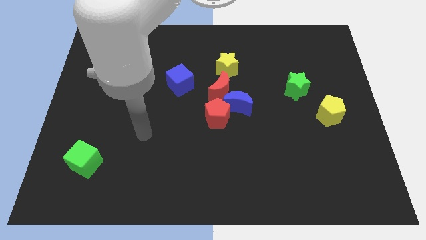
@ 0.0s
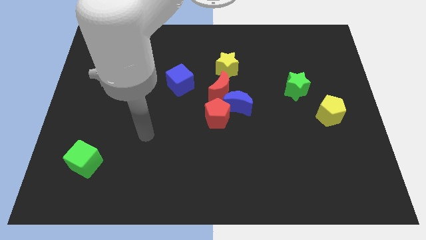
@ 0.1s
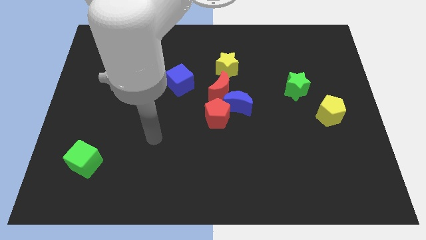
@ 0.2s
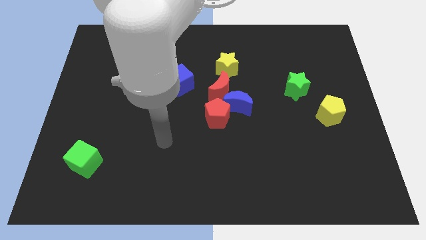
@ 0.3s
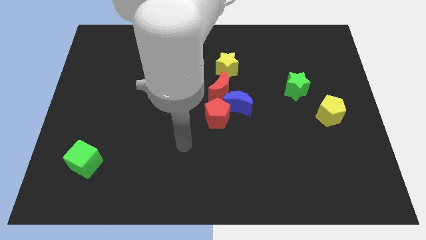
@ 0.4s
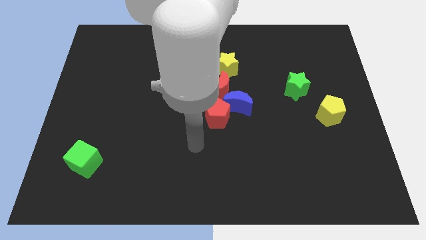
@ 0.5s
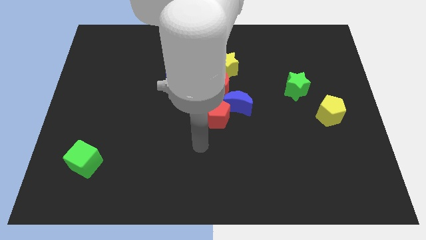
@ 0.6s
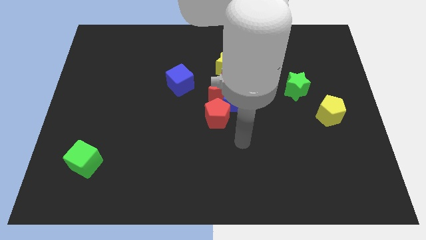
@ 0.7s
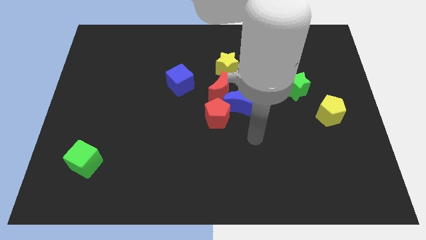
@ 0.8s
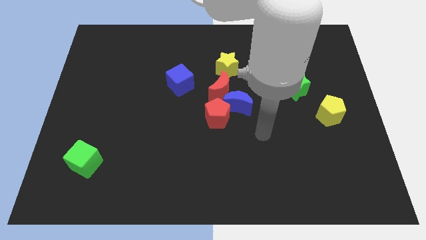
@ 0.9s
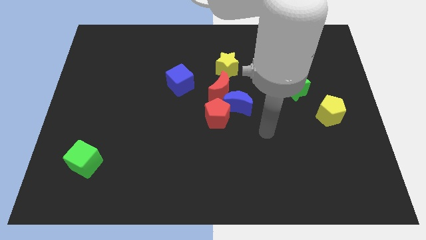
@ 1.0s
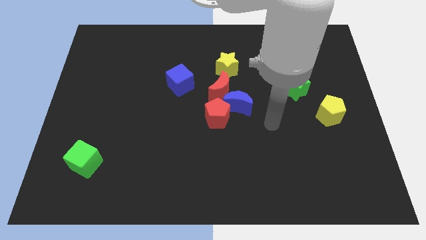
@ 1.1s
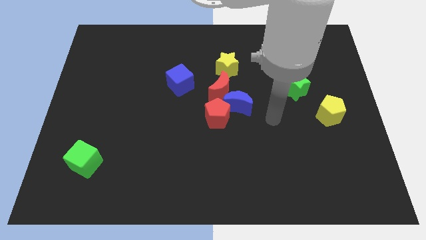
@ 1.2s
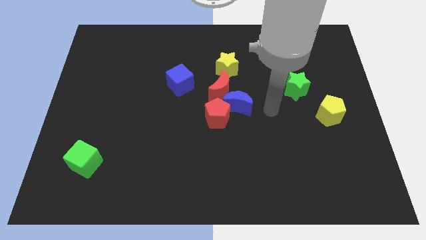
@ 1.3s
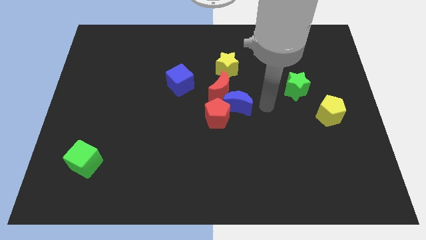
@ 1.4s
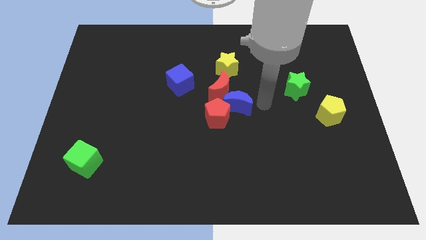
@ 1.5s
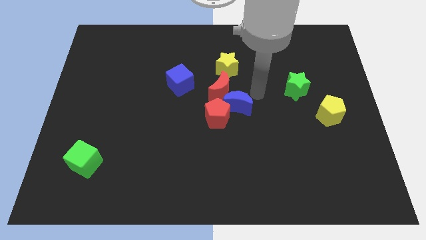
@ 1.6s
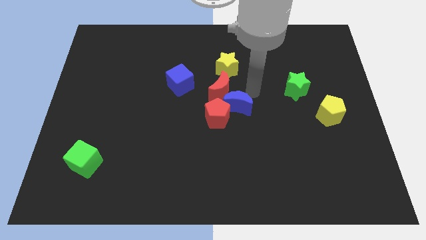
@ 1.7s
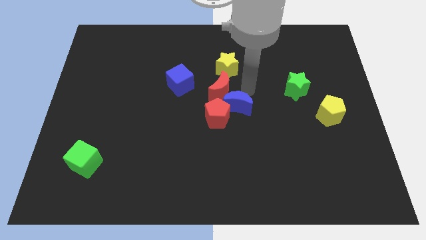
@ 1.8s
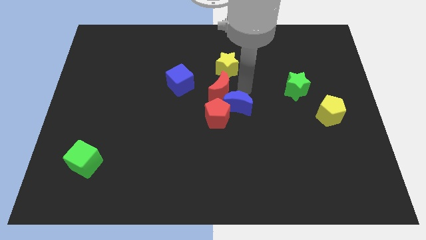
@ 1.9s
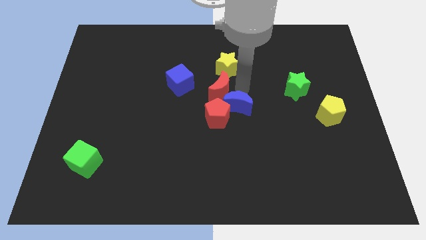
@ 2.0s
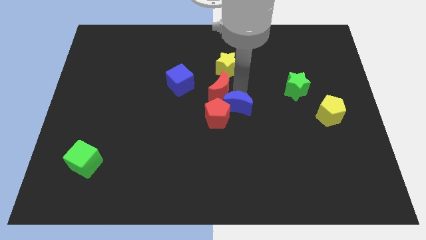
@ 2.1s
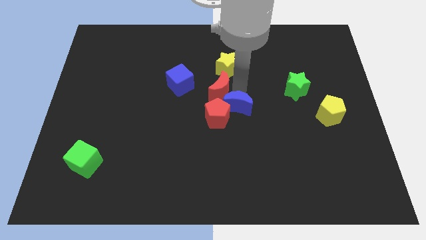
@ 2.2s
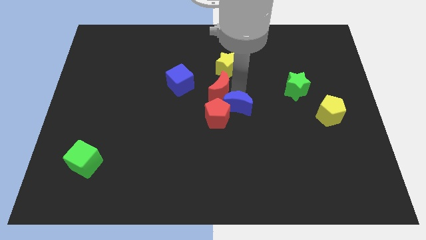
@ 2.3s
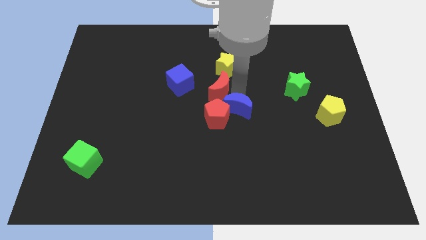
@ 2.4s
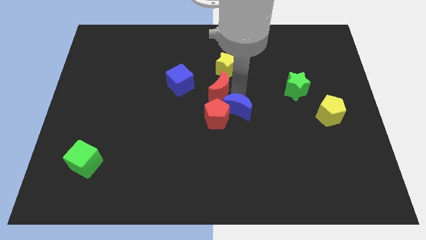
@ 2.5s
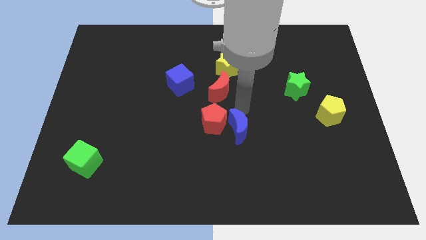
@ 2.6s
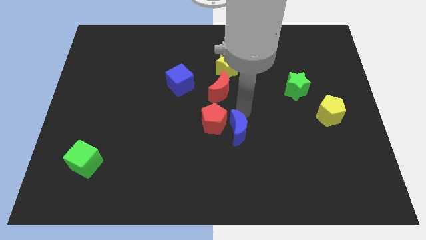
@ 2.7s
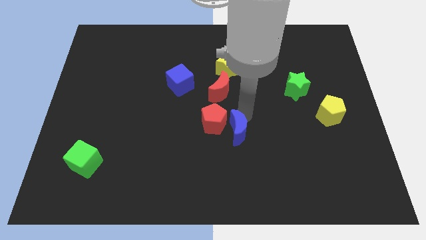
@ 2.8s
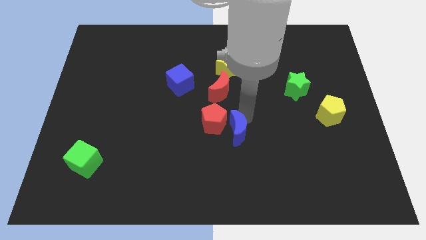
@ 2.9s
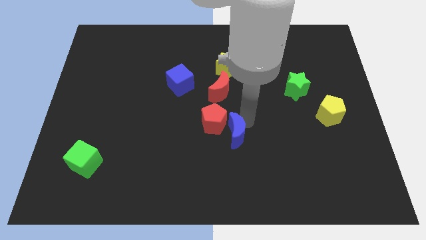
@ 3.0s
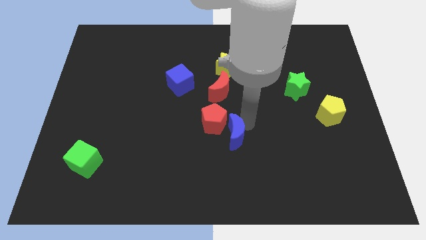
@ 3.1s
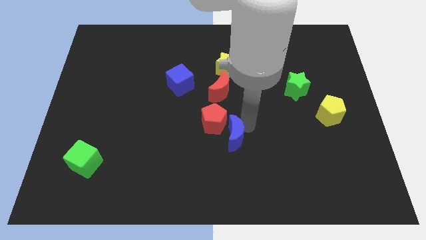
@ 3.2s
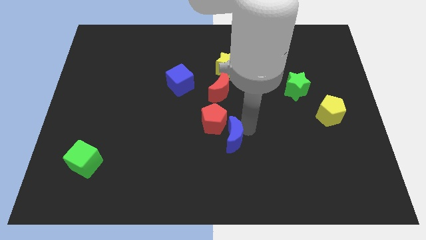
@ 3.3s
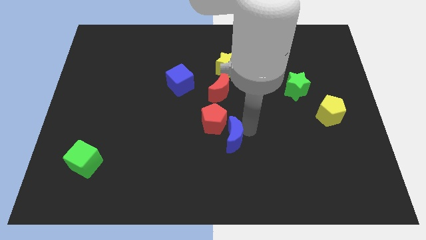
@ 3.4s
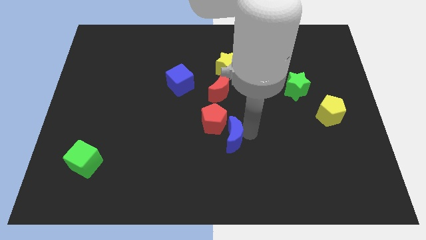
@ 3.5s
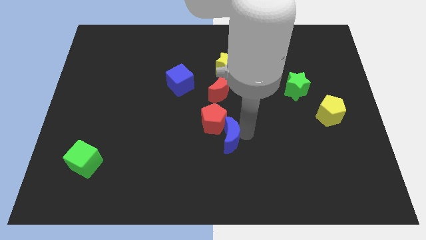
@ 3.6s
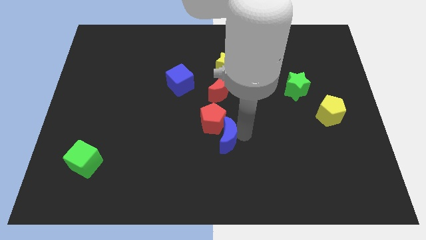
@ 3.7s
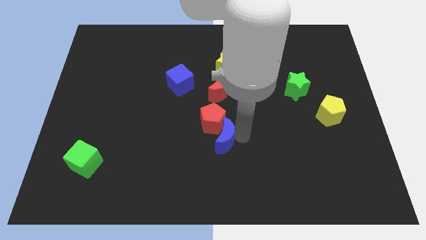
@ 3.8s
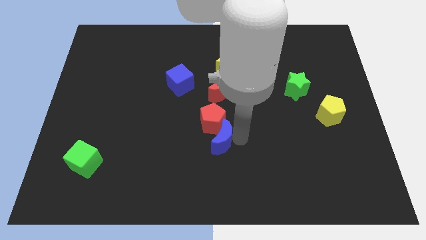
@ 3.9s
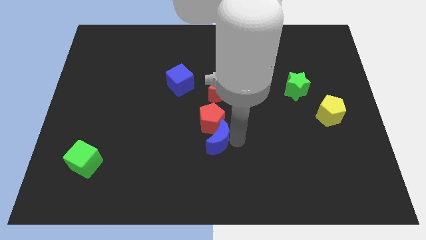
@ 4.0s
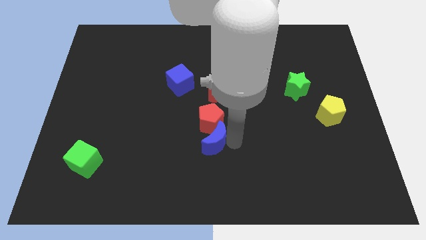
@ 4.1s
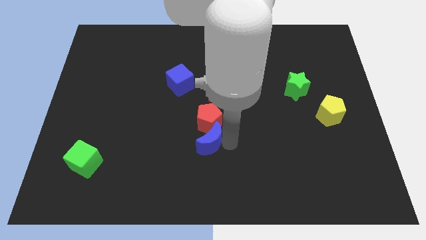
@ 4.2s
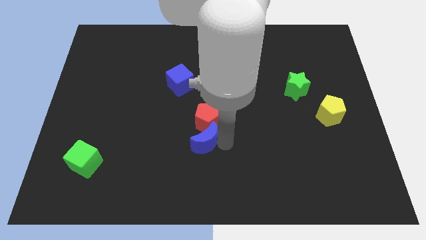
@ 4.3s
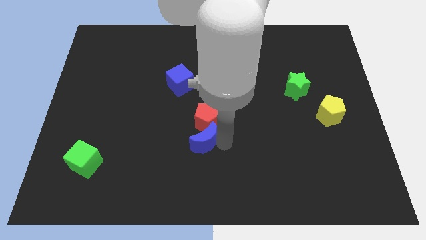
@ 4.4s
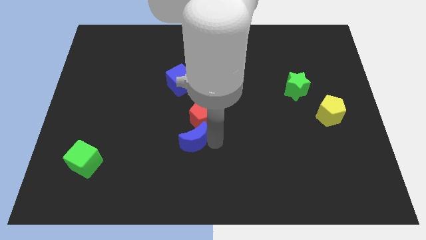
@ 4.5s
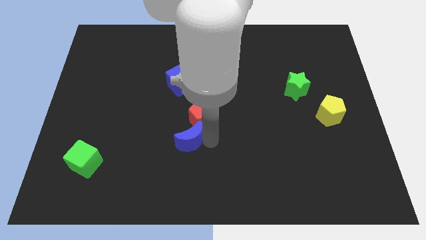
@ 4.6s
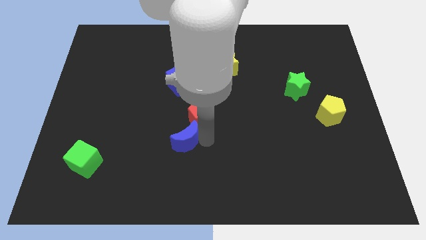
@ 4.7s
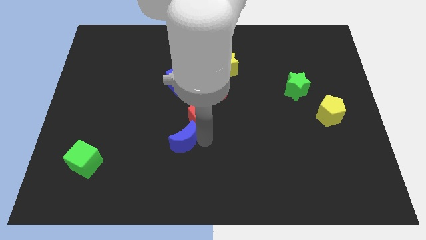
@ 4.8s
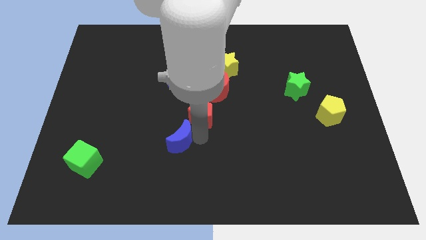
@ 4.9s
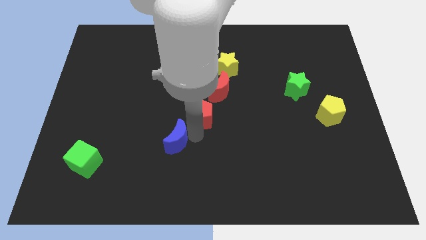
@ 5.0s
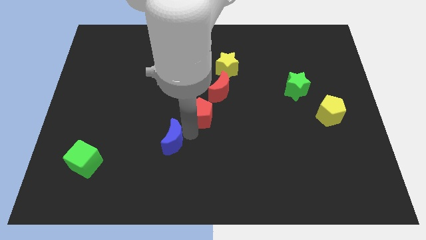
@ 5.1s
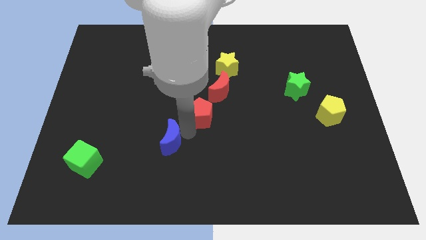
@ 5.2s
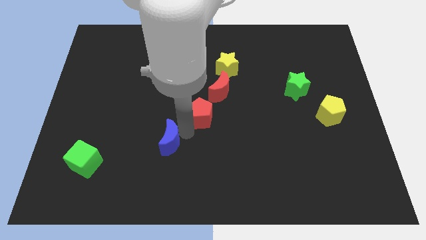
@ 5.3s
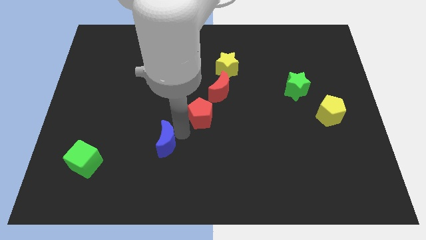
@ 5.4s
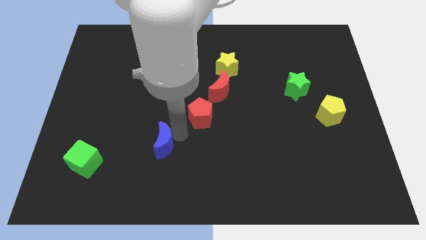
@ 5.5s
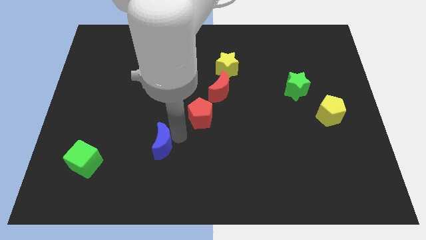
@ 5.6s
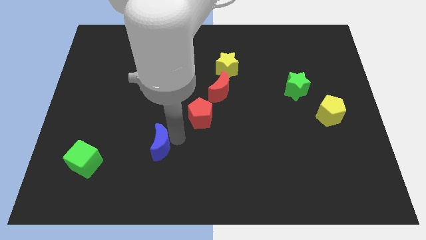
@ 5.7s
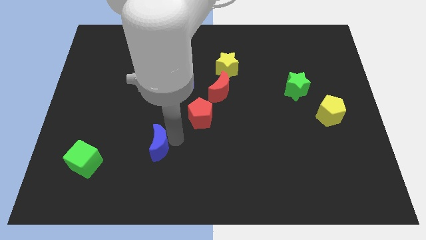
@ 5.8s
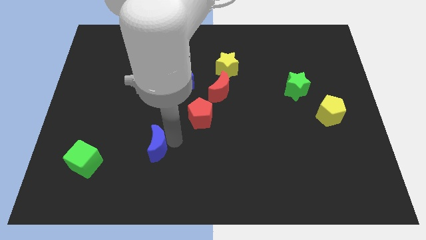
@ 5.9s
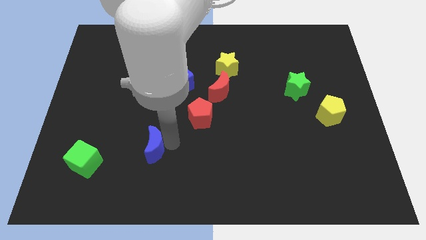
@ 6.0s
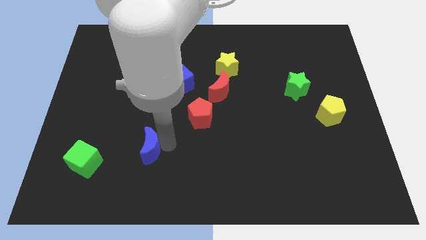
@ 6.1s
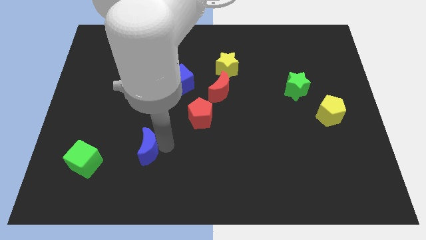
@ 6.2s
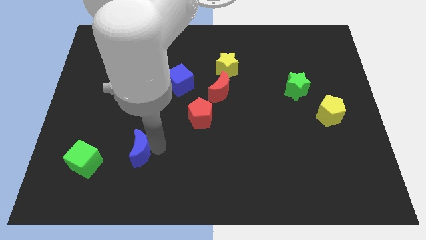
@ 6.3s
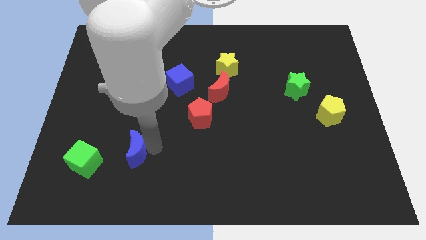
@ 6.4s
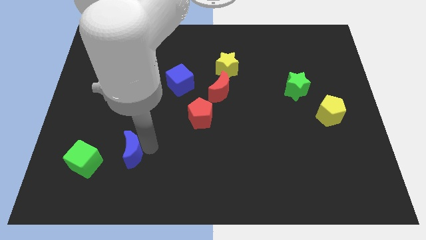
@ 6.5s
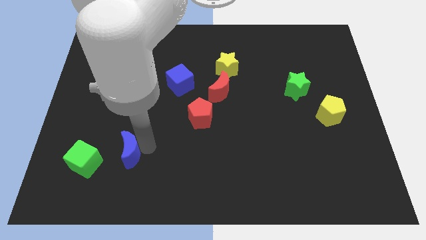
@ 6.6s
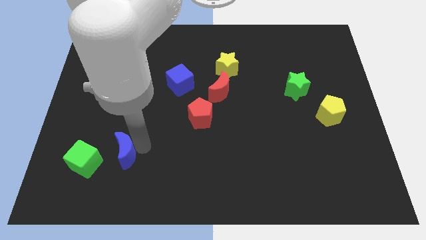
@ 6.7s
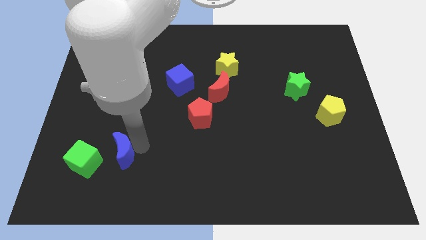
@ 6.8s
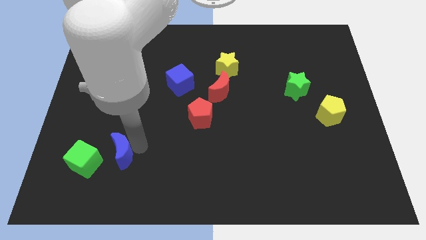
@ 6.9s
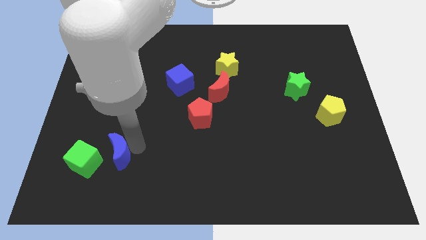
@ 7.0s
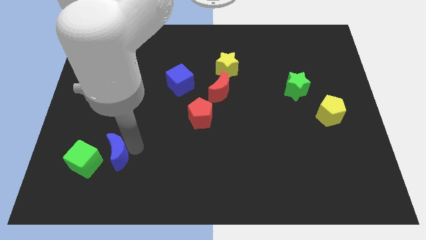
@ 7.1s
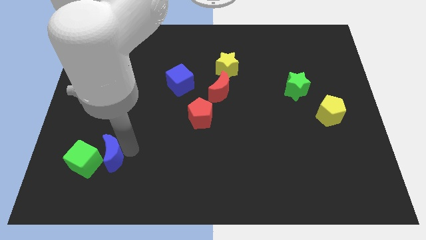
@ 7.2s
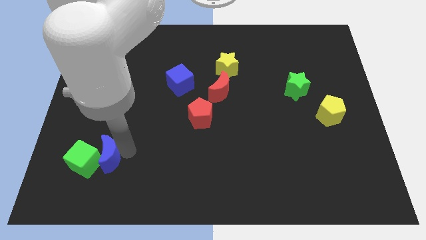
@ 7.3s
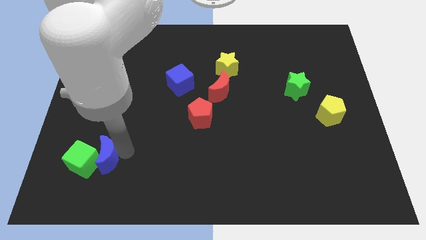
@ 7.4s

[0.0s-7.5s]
slide the blue moon to the green cube

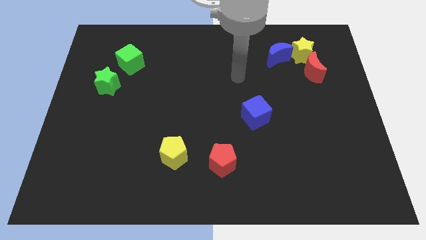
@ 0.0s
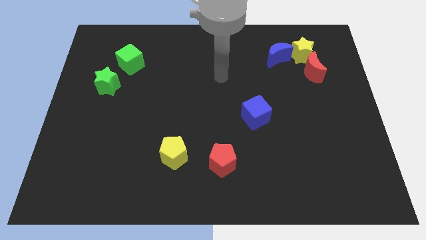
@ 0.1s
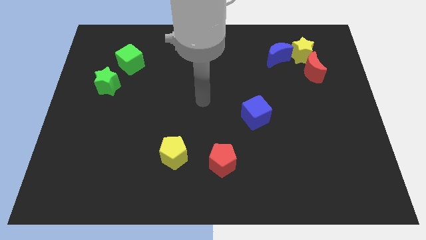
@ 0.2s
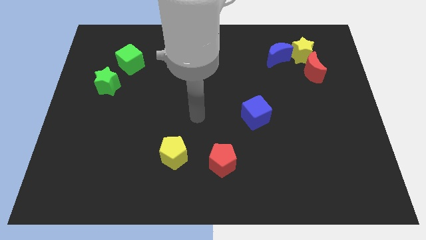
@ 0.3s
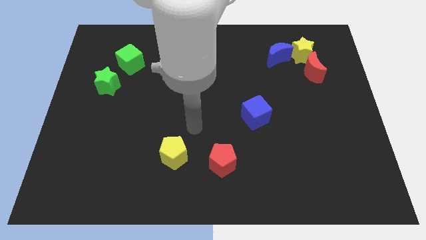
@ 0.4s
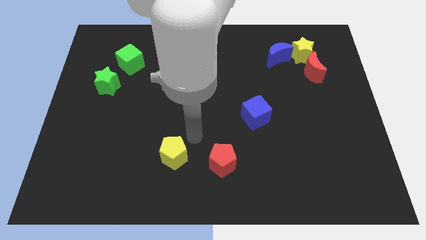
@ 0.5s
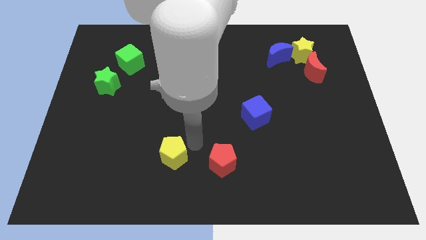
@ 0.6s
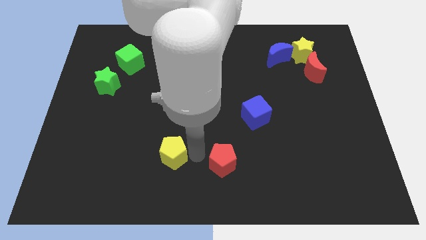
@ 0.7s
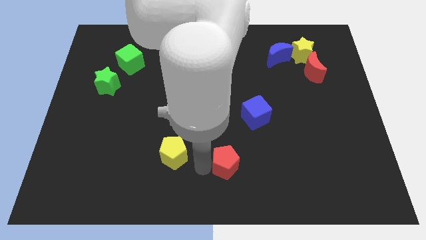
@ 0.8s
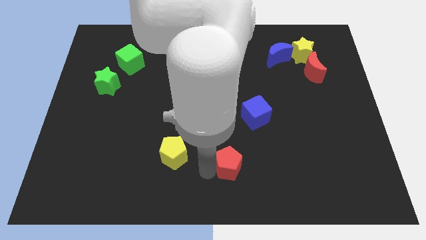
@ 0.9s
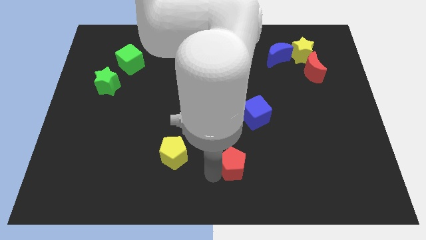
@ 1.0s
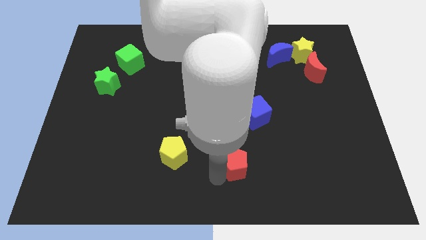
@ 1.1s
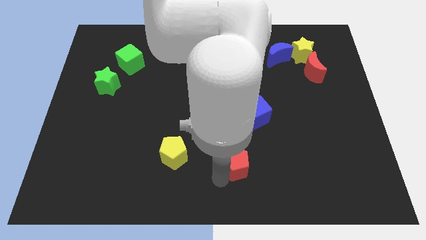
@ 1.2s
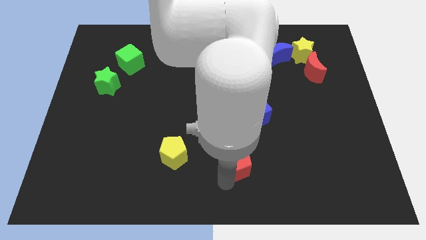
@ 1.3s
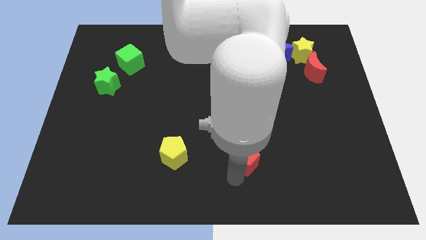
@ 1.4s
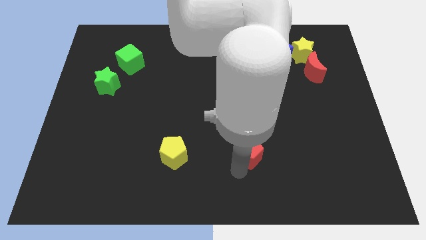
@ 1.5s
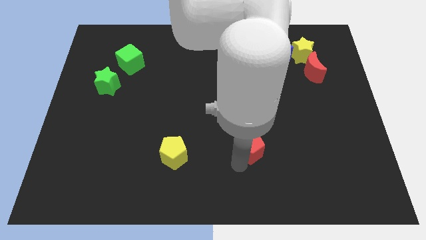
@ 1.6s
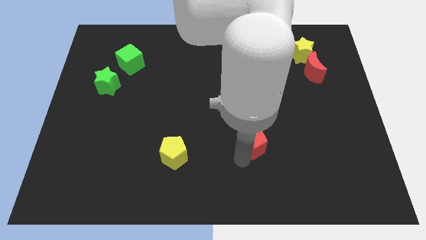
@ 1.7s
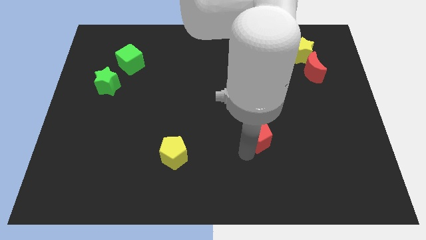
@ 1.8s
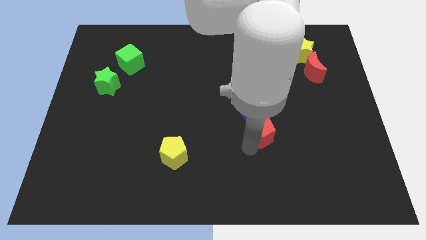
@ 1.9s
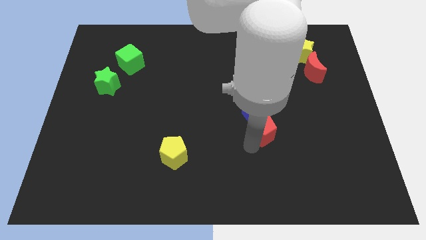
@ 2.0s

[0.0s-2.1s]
move the red pentagon close to the blue cube
